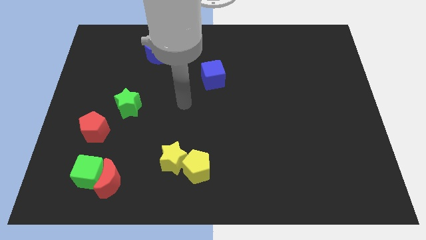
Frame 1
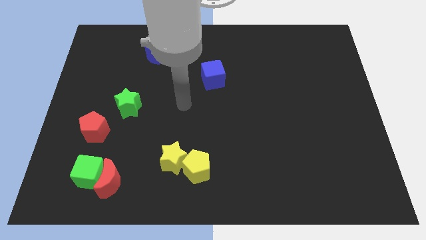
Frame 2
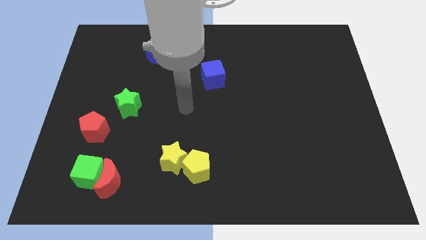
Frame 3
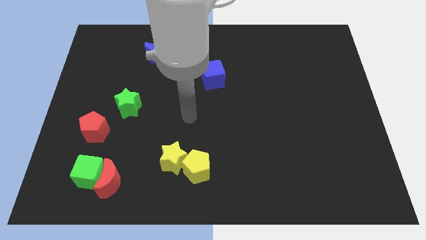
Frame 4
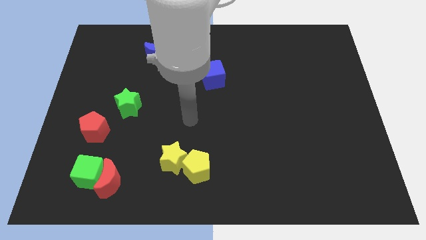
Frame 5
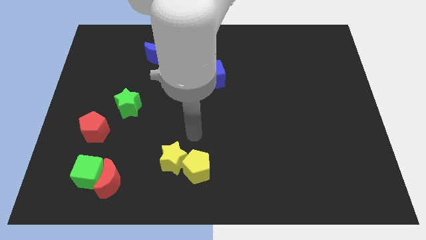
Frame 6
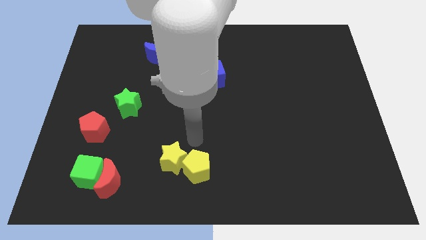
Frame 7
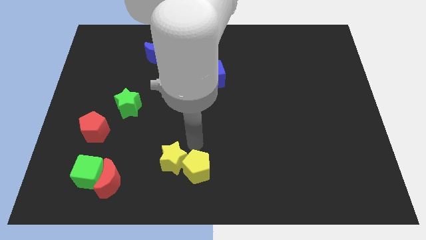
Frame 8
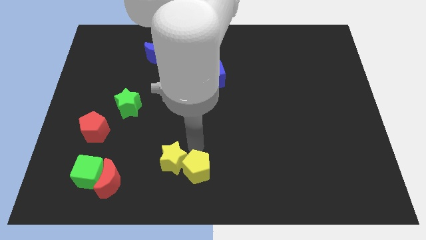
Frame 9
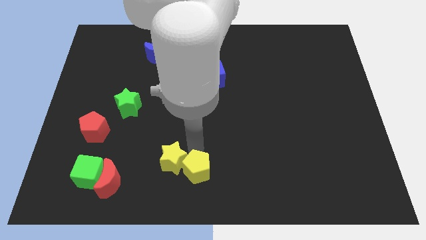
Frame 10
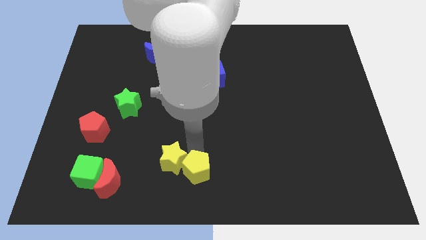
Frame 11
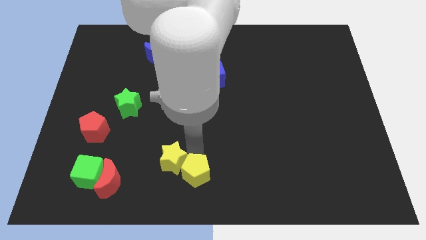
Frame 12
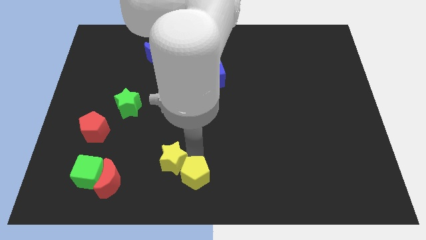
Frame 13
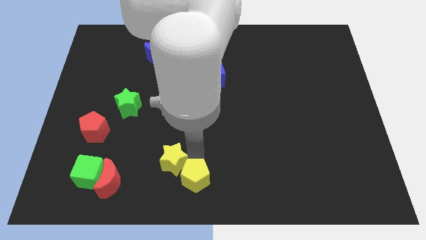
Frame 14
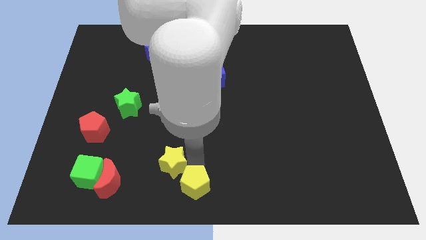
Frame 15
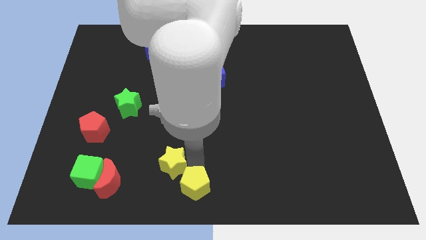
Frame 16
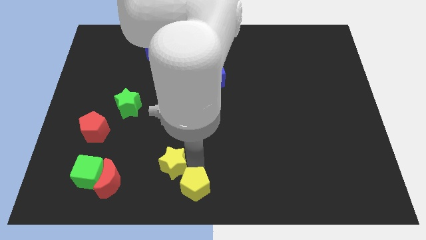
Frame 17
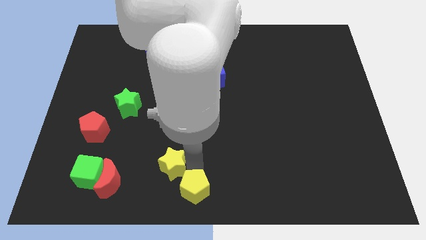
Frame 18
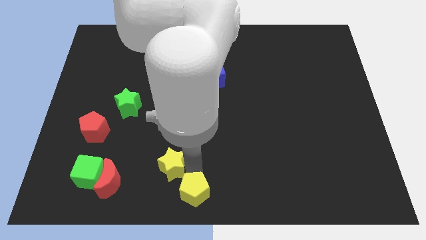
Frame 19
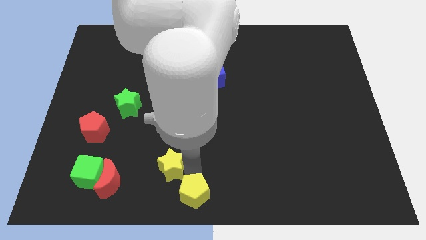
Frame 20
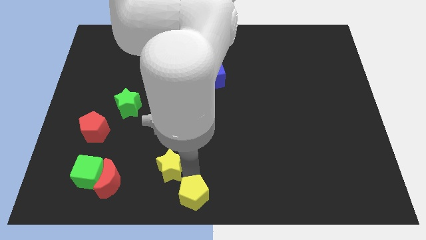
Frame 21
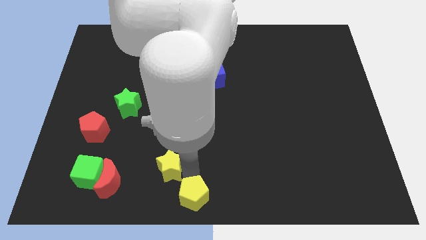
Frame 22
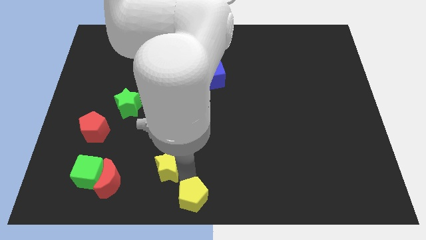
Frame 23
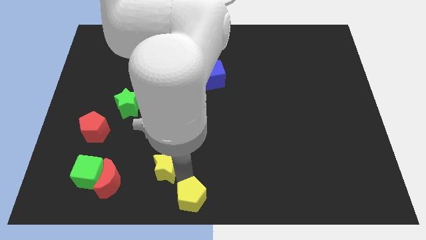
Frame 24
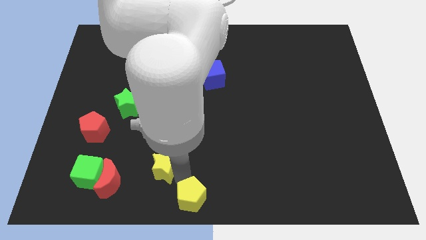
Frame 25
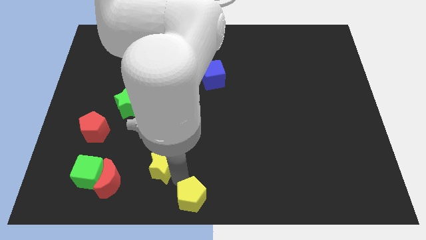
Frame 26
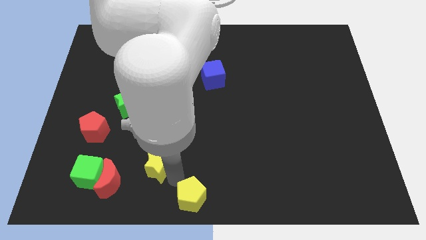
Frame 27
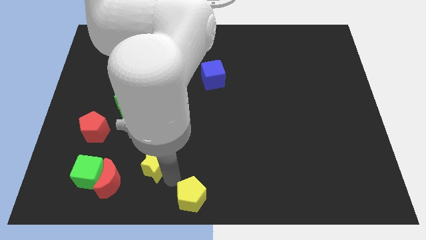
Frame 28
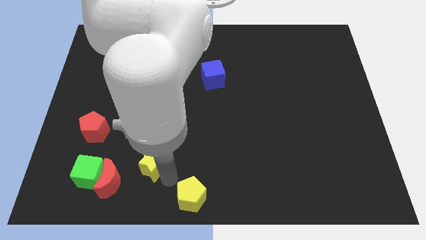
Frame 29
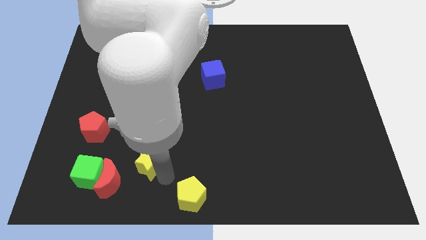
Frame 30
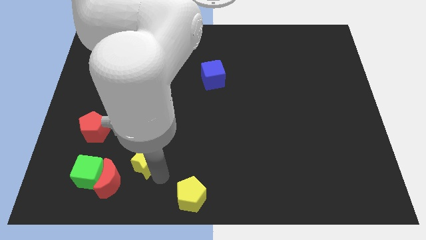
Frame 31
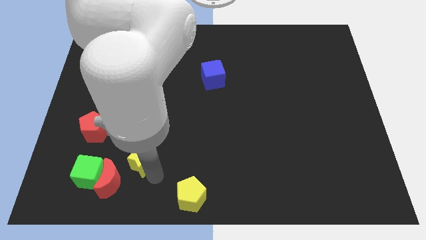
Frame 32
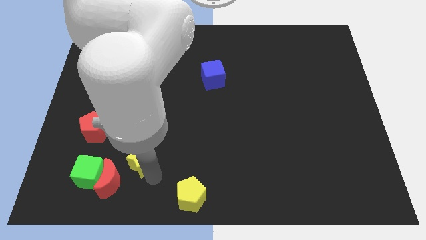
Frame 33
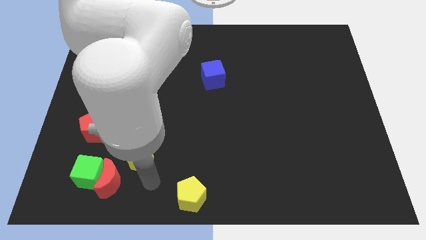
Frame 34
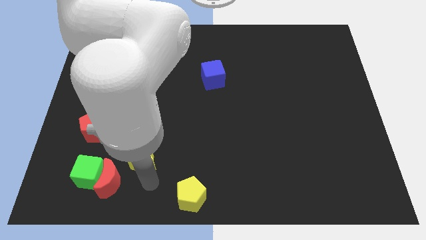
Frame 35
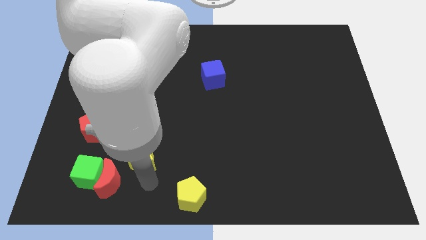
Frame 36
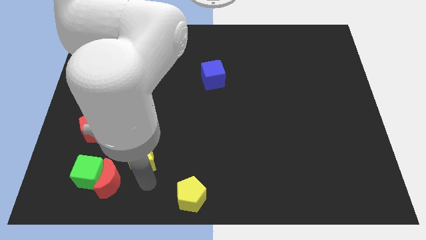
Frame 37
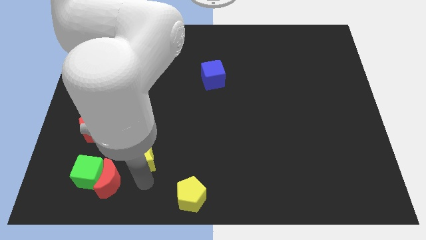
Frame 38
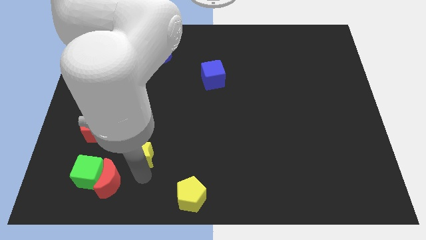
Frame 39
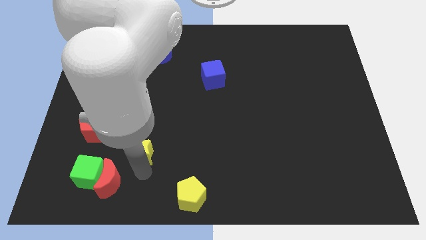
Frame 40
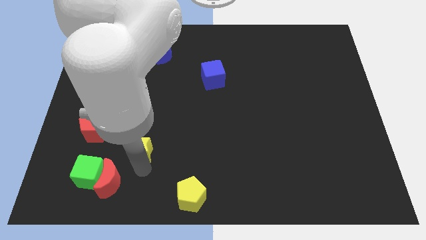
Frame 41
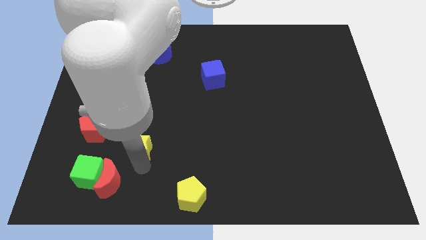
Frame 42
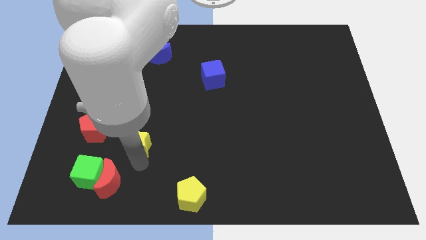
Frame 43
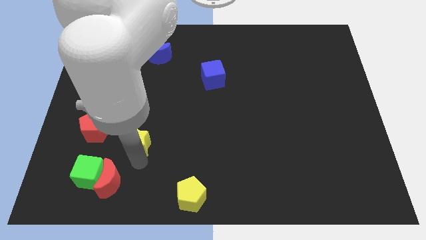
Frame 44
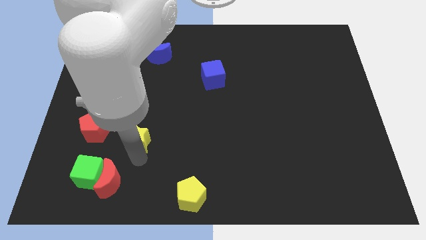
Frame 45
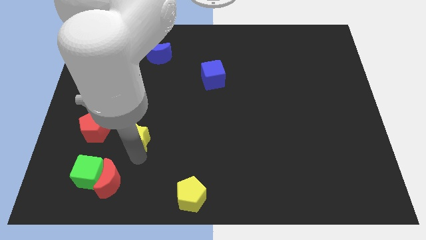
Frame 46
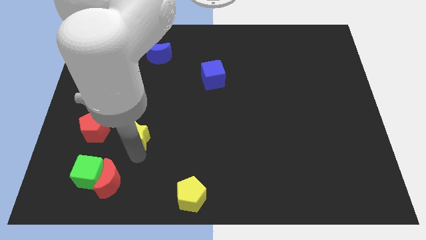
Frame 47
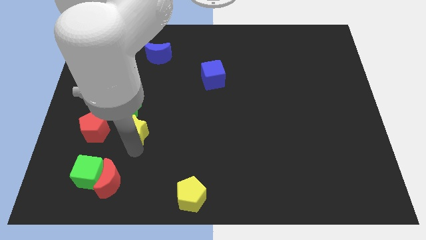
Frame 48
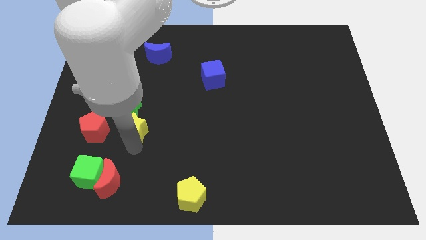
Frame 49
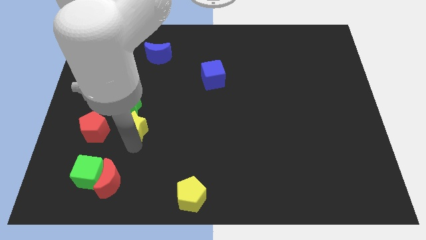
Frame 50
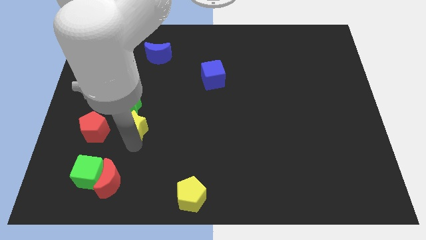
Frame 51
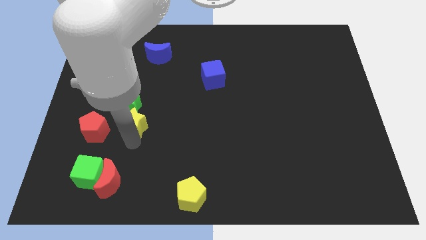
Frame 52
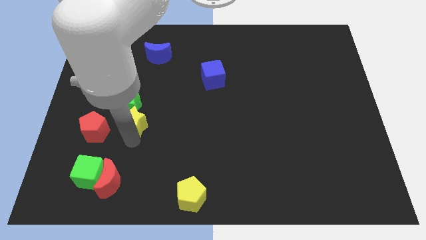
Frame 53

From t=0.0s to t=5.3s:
slide the yellow star close to the green star

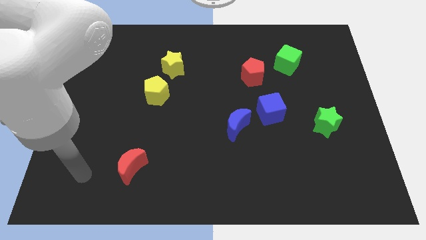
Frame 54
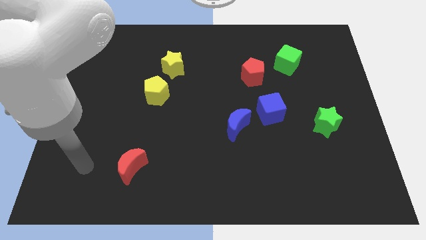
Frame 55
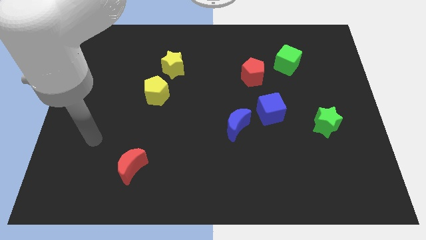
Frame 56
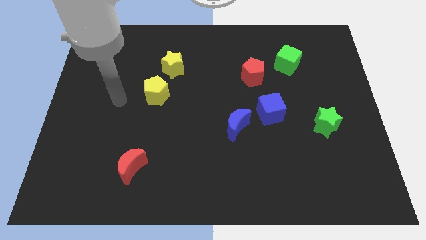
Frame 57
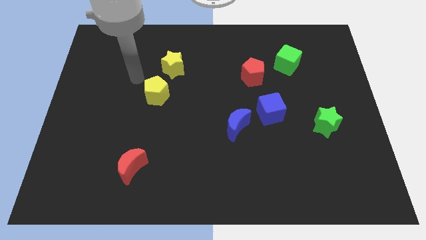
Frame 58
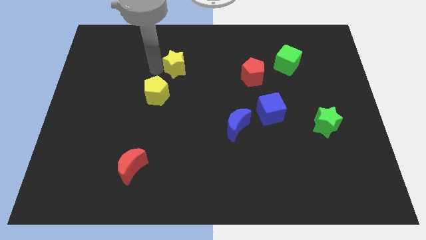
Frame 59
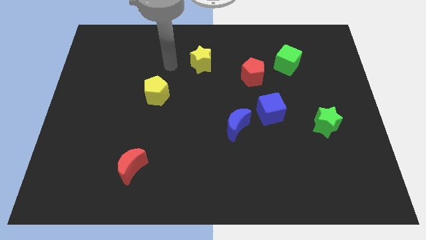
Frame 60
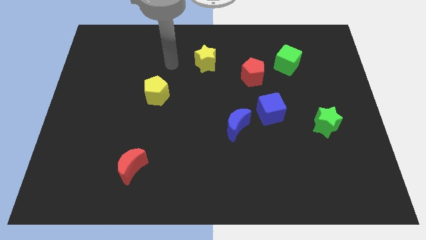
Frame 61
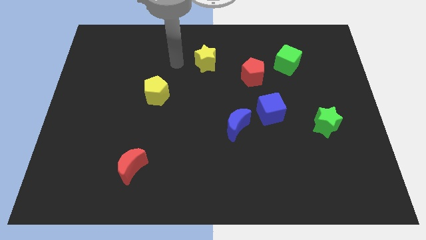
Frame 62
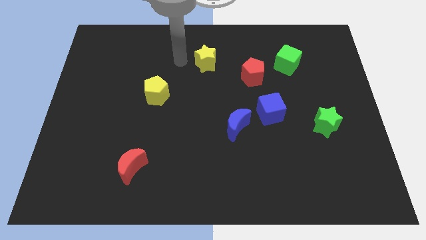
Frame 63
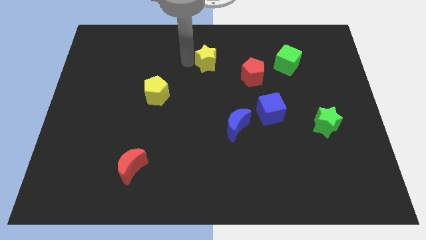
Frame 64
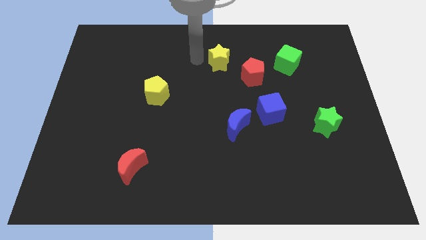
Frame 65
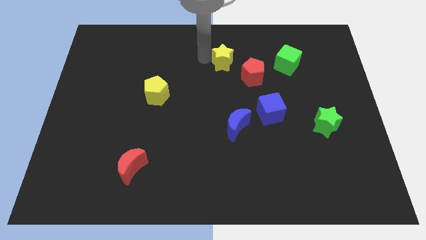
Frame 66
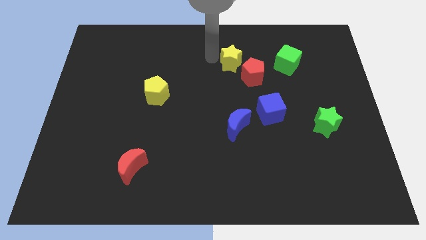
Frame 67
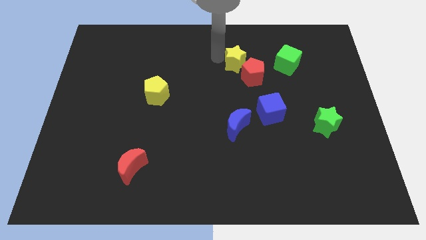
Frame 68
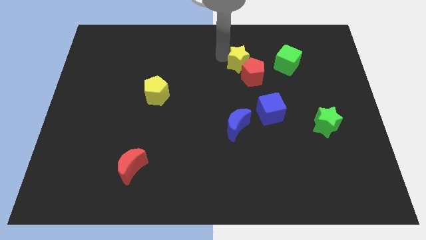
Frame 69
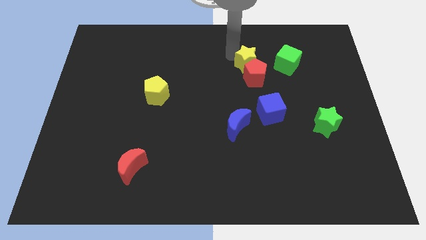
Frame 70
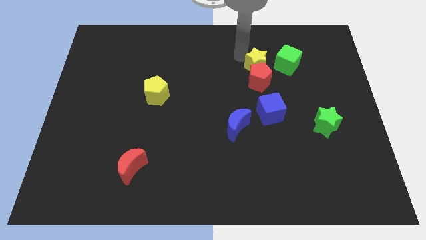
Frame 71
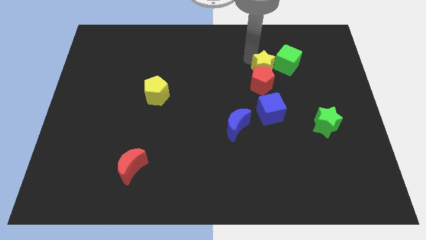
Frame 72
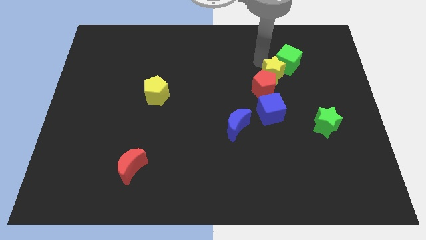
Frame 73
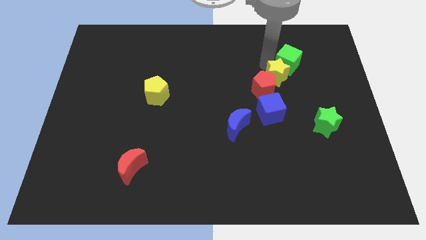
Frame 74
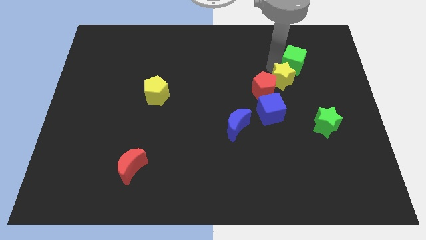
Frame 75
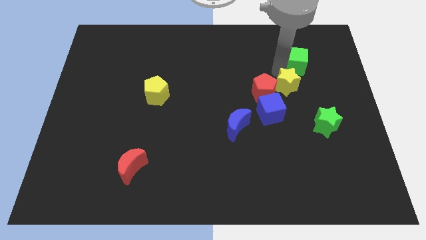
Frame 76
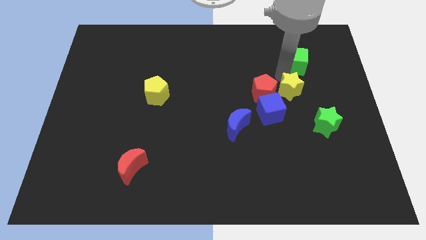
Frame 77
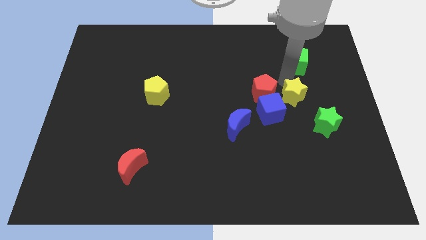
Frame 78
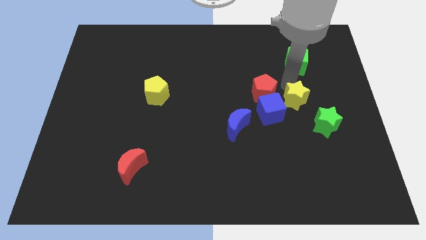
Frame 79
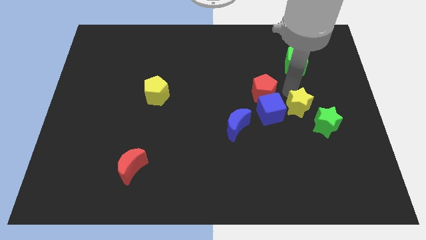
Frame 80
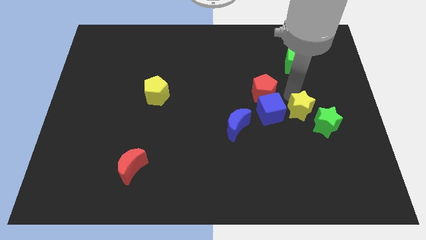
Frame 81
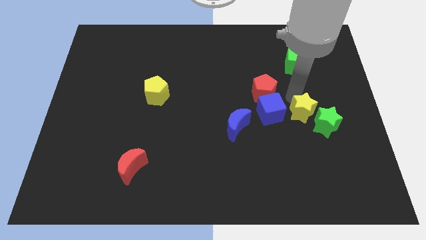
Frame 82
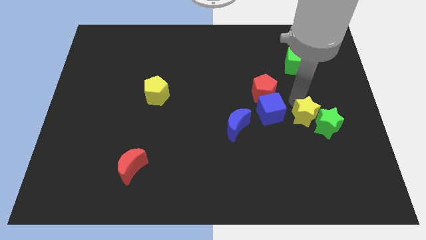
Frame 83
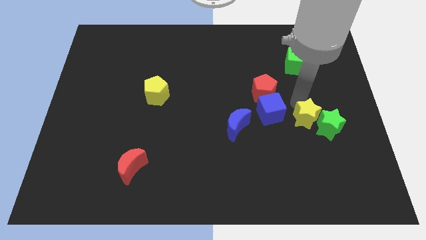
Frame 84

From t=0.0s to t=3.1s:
push the yellow star to the green star

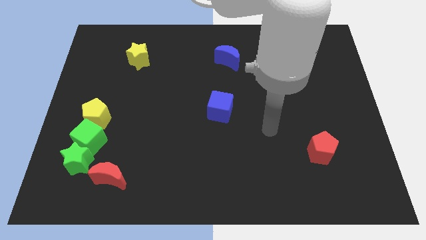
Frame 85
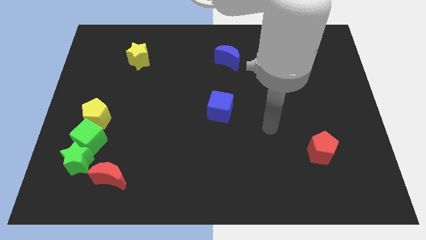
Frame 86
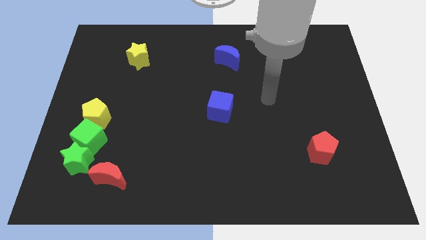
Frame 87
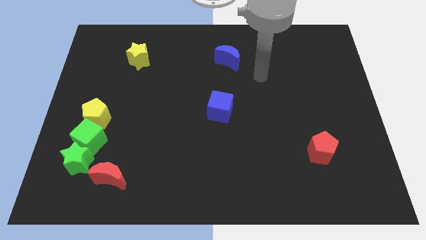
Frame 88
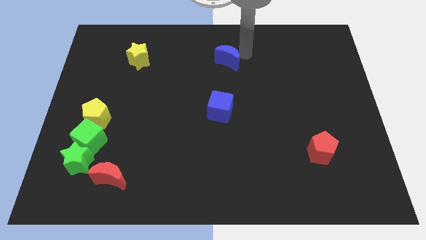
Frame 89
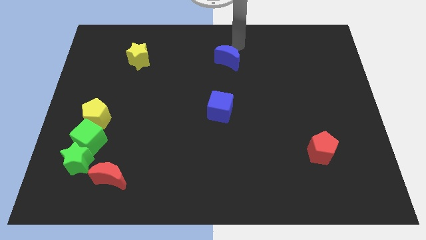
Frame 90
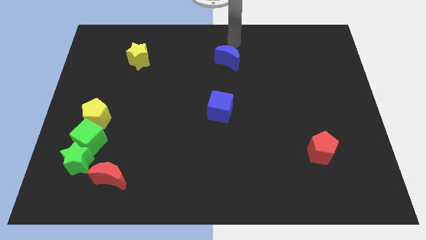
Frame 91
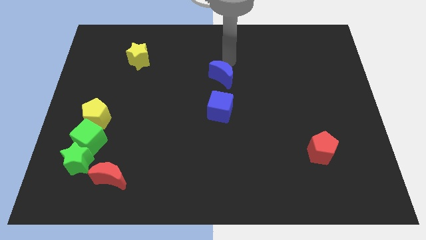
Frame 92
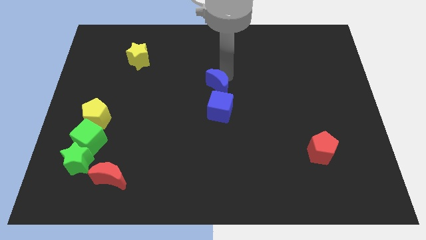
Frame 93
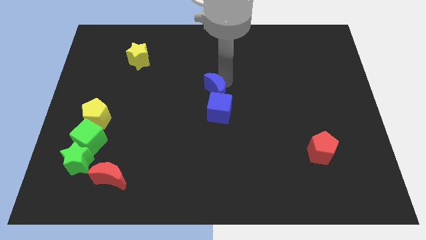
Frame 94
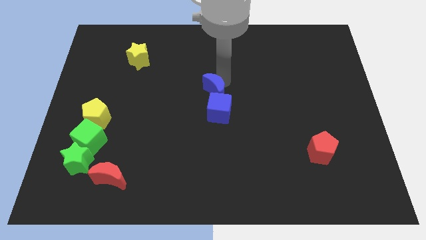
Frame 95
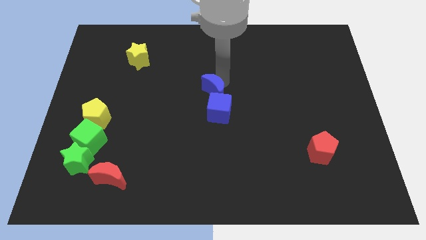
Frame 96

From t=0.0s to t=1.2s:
slide the blue moon towards the blue cube
